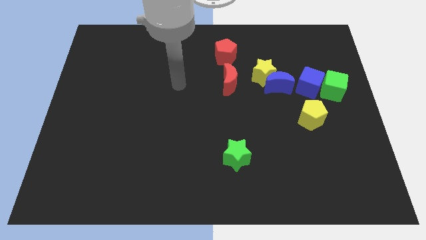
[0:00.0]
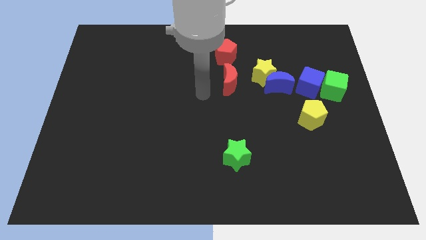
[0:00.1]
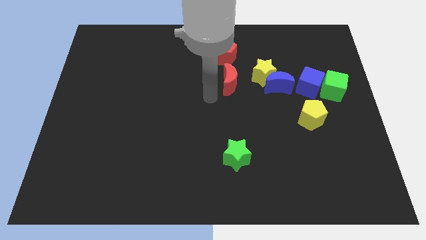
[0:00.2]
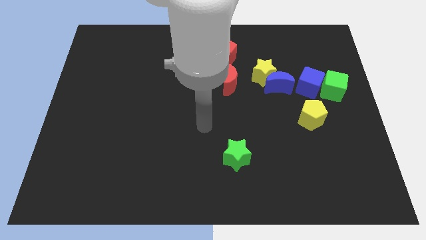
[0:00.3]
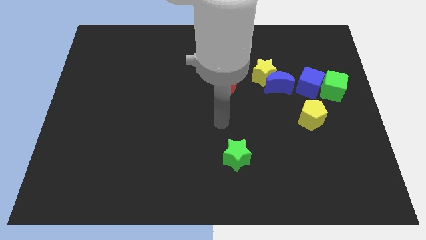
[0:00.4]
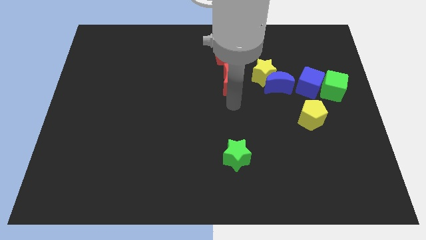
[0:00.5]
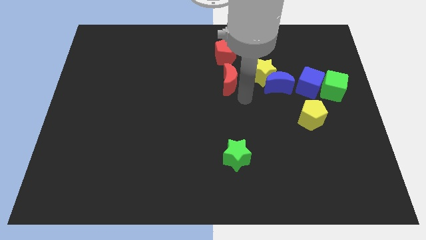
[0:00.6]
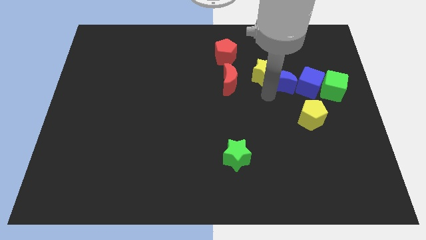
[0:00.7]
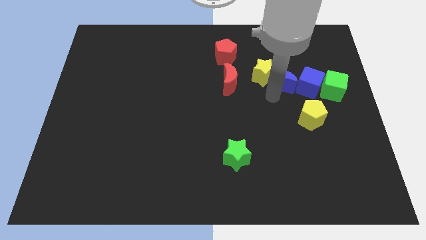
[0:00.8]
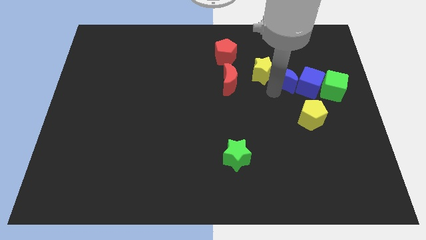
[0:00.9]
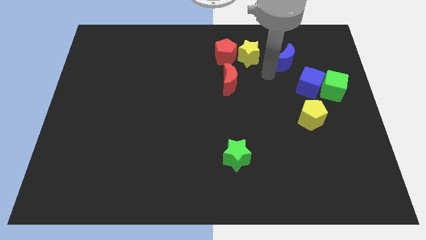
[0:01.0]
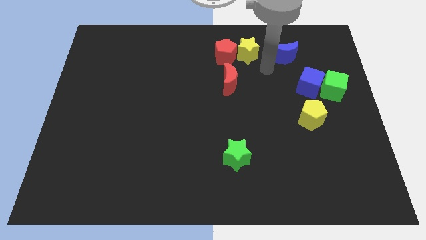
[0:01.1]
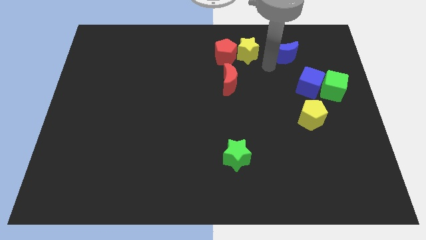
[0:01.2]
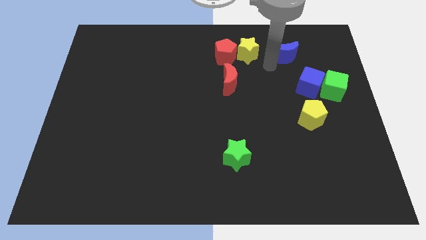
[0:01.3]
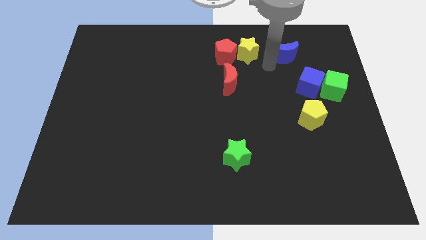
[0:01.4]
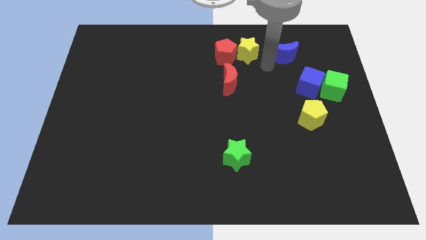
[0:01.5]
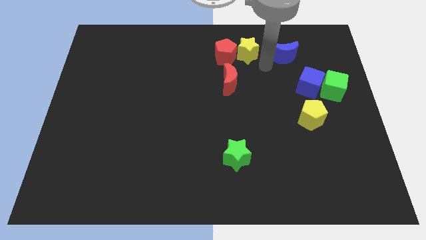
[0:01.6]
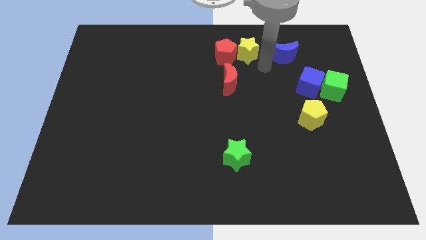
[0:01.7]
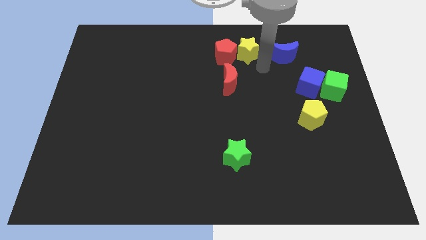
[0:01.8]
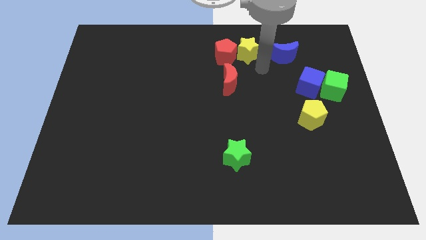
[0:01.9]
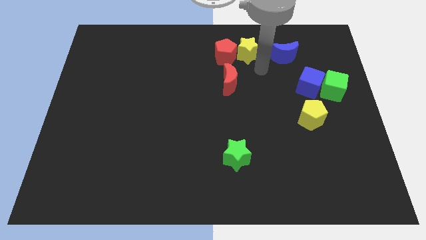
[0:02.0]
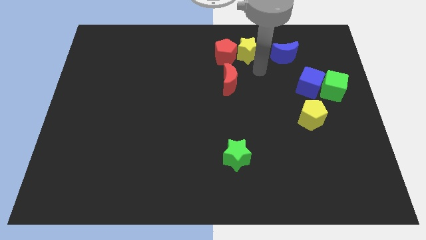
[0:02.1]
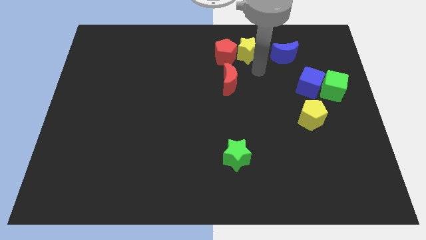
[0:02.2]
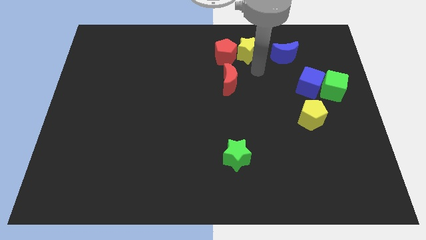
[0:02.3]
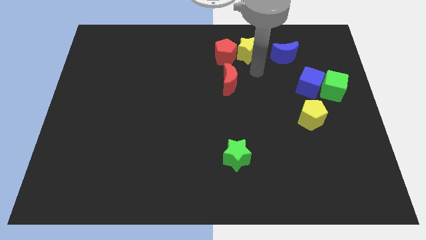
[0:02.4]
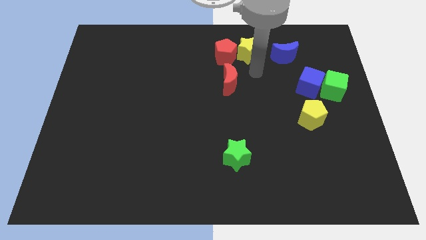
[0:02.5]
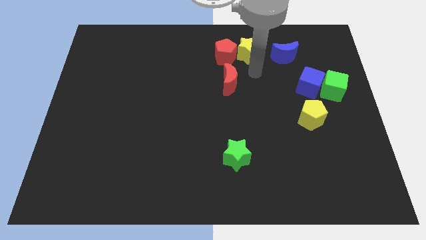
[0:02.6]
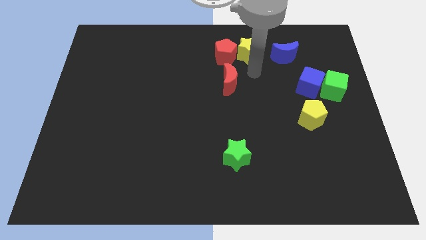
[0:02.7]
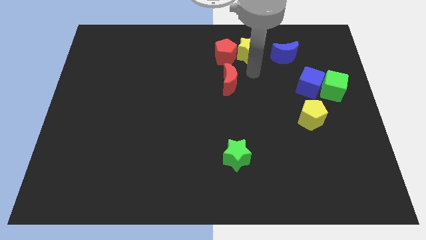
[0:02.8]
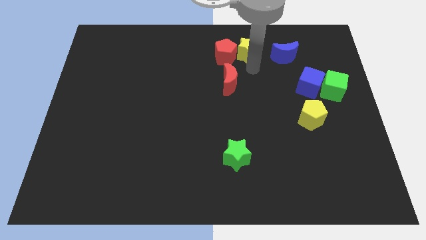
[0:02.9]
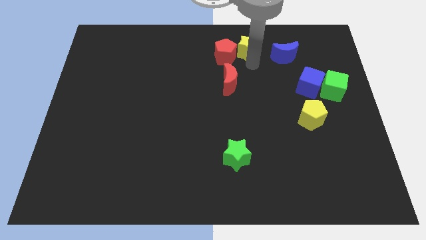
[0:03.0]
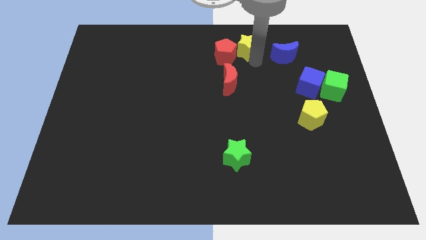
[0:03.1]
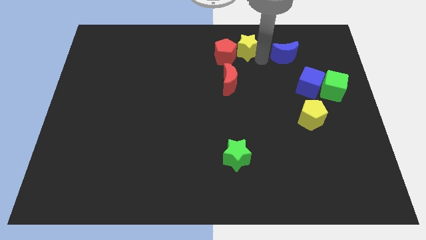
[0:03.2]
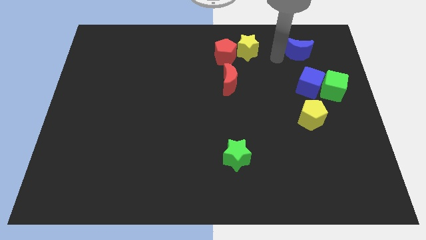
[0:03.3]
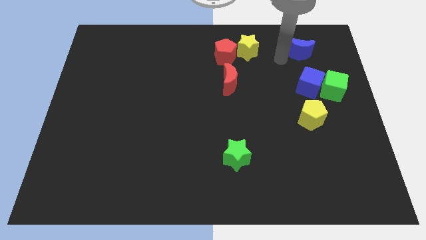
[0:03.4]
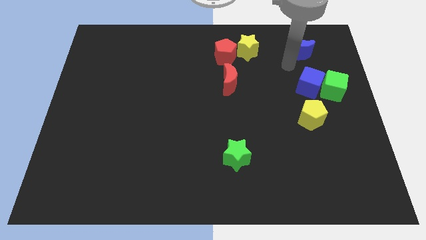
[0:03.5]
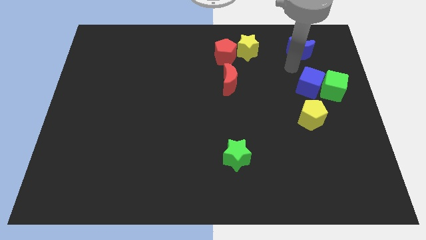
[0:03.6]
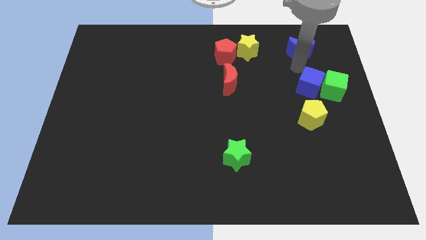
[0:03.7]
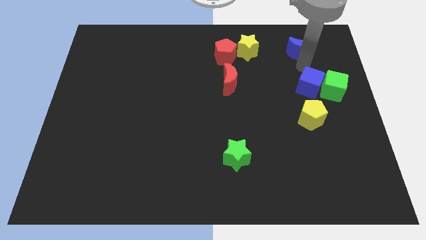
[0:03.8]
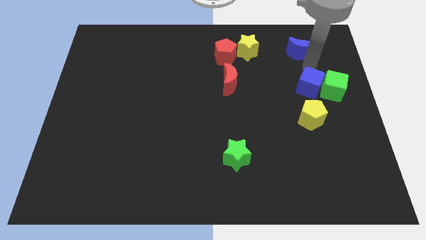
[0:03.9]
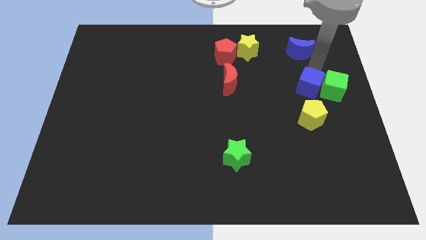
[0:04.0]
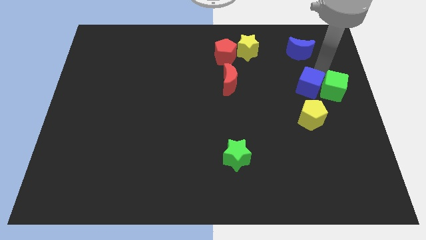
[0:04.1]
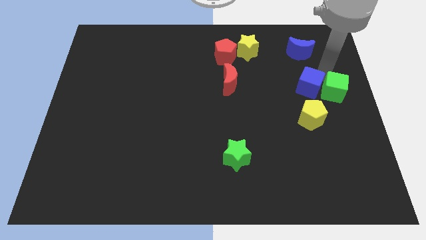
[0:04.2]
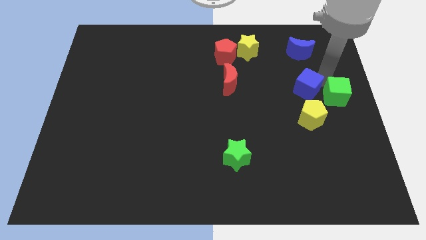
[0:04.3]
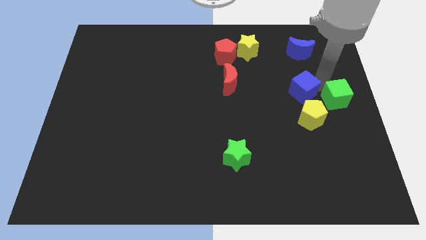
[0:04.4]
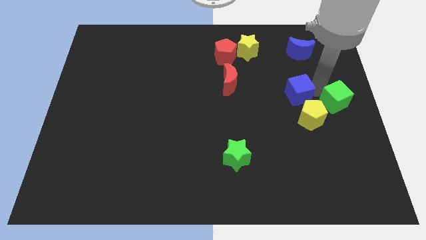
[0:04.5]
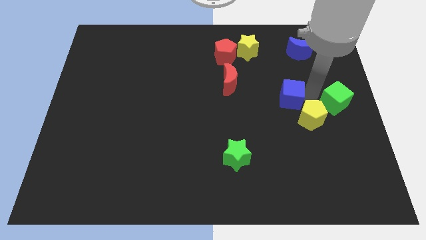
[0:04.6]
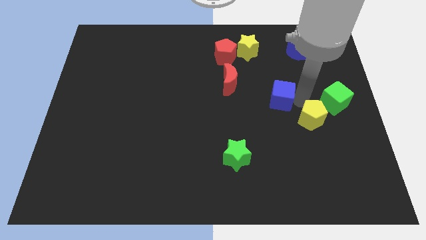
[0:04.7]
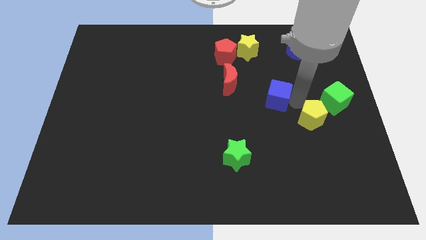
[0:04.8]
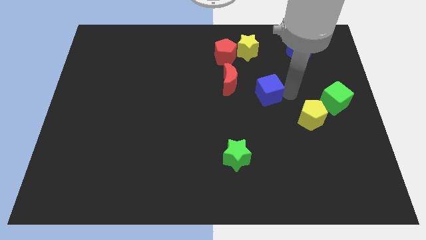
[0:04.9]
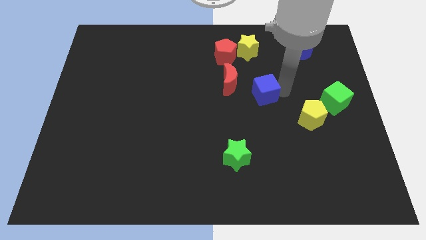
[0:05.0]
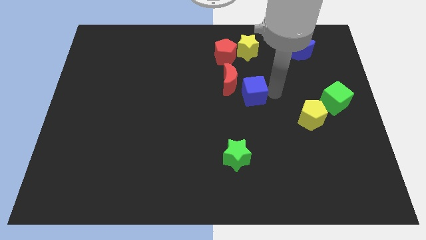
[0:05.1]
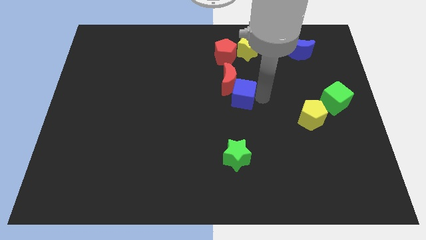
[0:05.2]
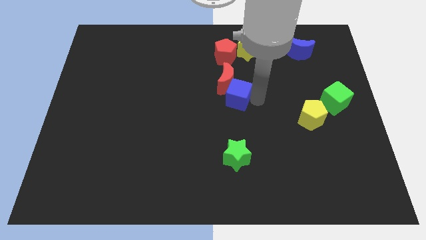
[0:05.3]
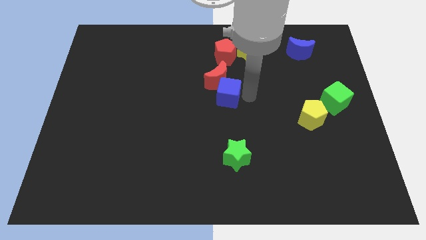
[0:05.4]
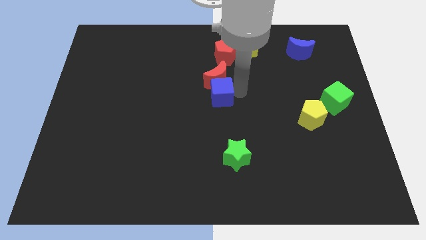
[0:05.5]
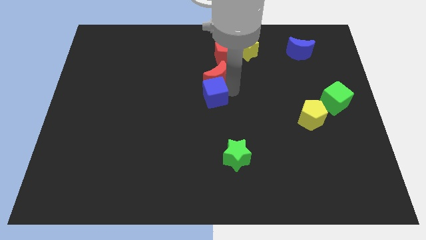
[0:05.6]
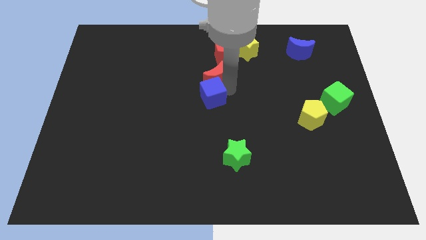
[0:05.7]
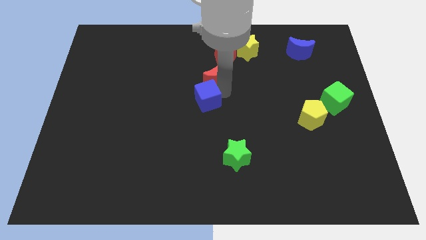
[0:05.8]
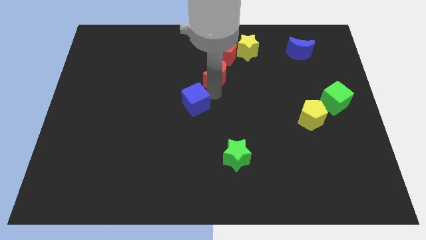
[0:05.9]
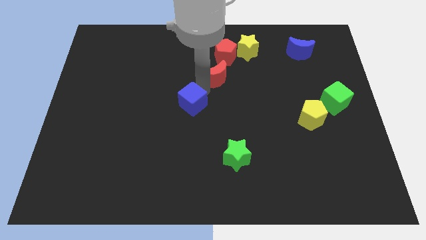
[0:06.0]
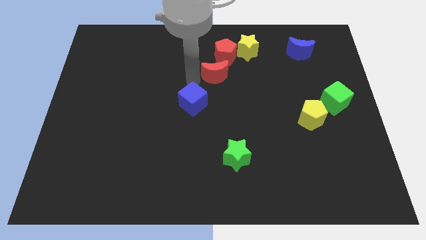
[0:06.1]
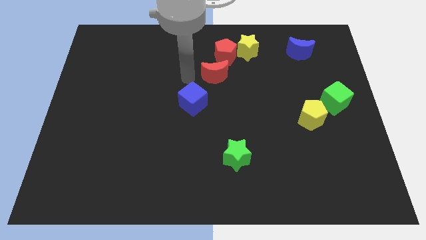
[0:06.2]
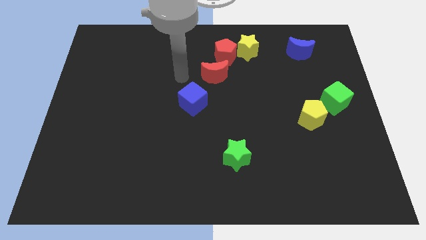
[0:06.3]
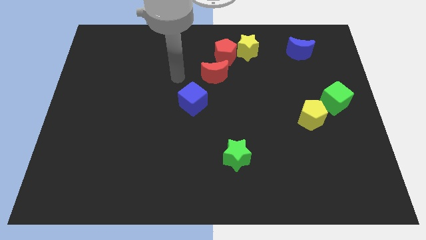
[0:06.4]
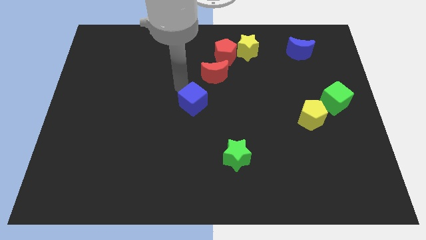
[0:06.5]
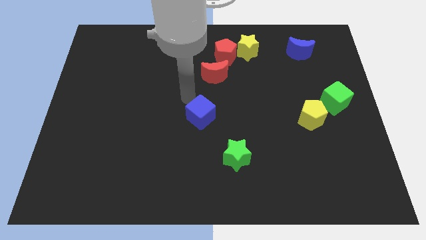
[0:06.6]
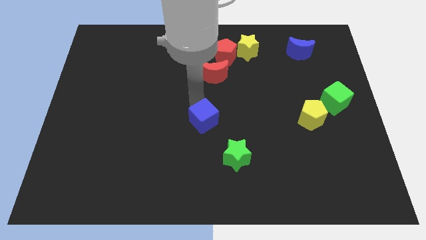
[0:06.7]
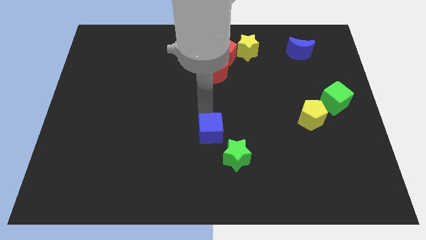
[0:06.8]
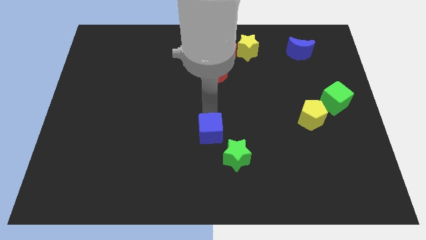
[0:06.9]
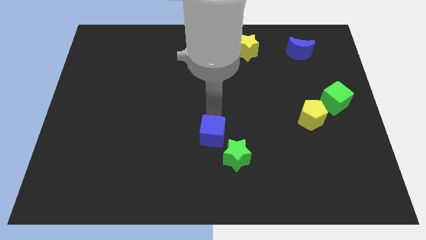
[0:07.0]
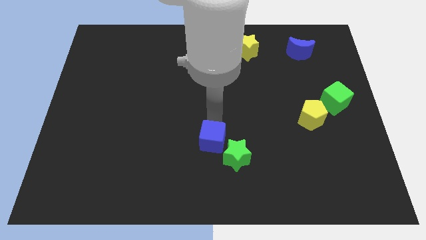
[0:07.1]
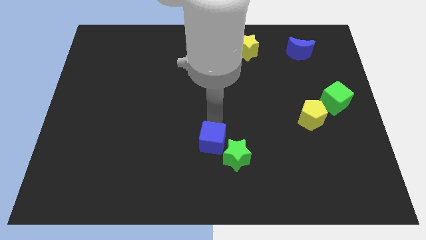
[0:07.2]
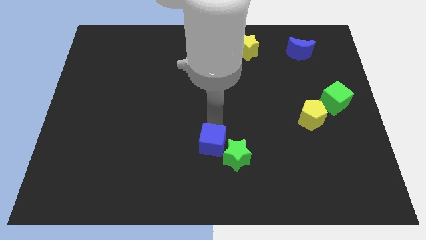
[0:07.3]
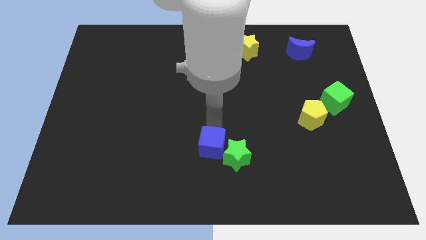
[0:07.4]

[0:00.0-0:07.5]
slide the blue cube close to the green star

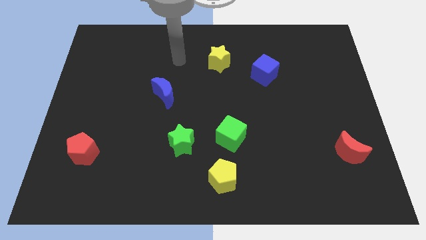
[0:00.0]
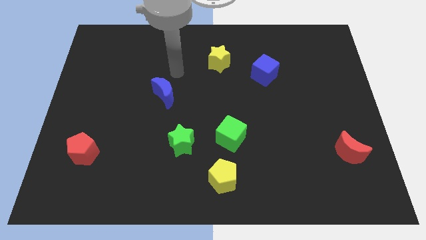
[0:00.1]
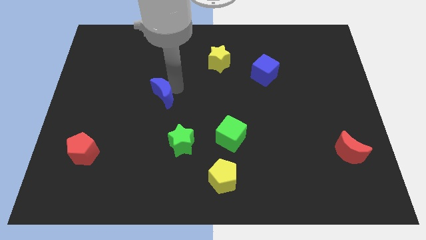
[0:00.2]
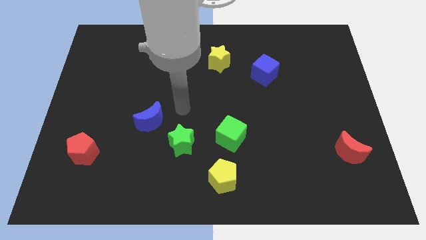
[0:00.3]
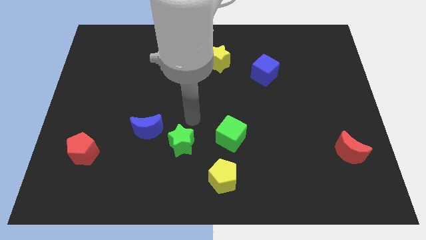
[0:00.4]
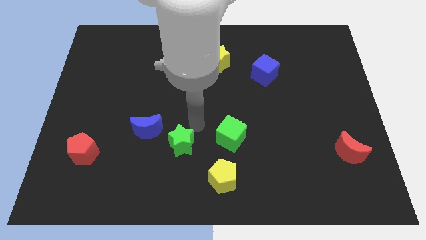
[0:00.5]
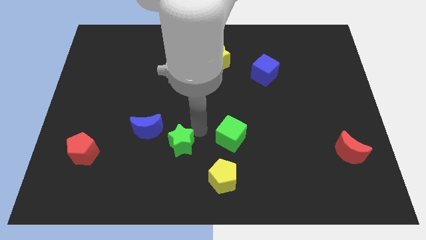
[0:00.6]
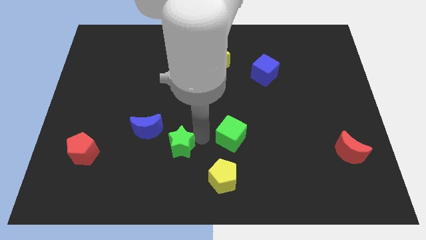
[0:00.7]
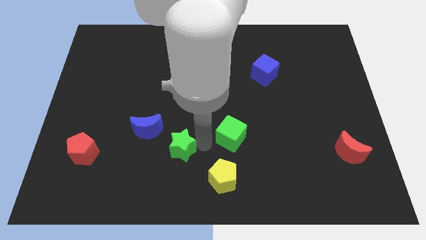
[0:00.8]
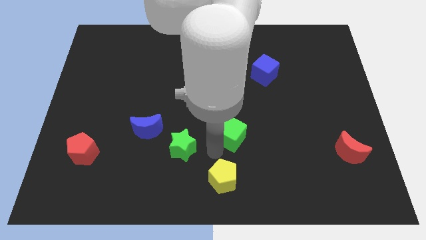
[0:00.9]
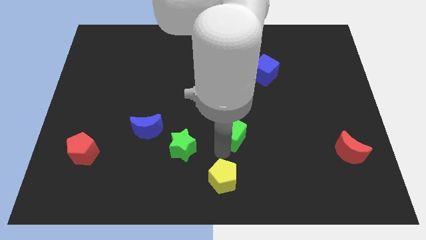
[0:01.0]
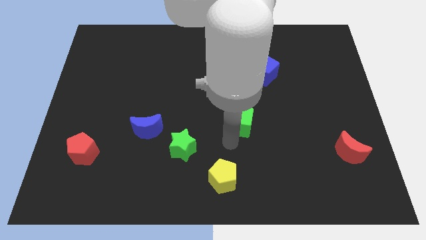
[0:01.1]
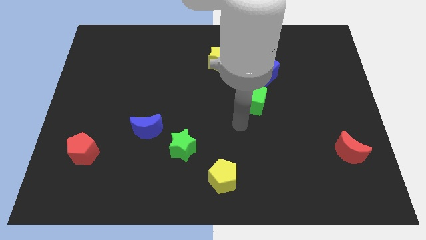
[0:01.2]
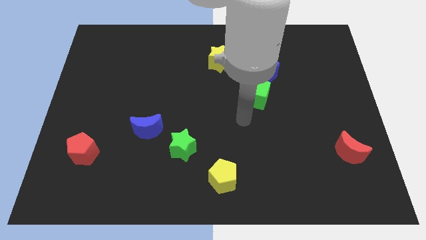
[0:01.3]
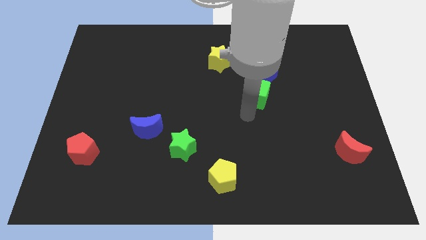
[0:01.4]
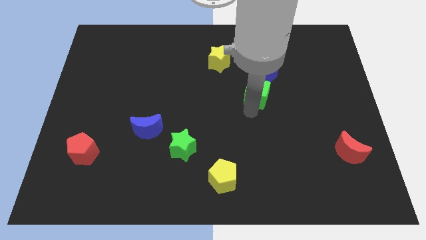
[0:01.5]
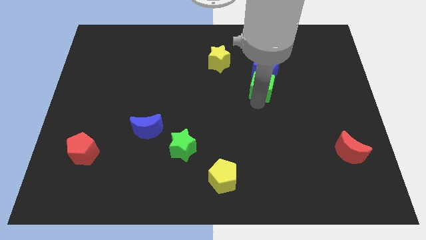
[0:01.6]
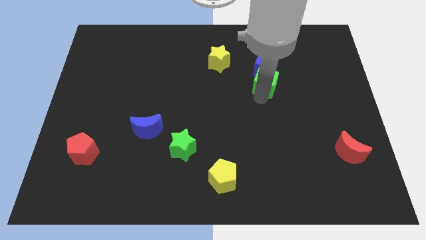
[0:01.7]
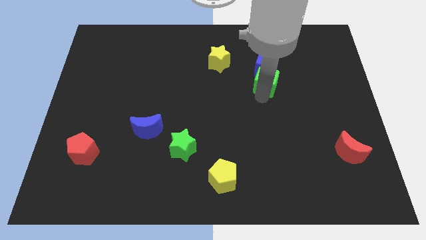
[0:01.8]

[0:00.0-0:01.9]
slide the green cube next to the blue cube
